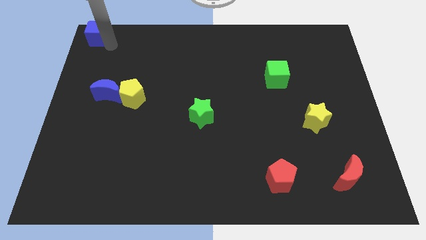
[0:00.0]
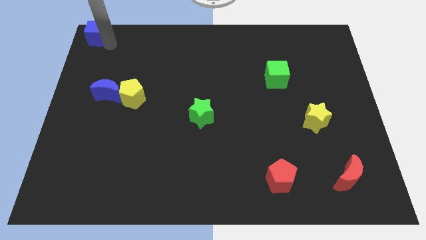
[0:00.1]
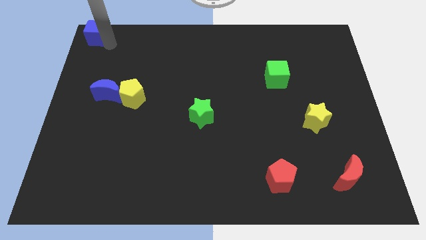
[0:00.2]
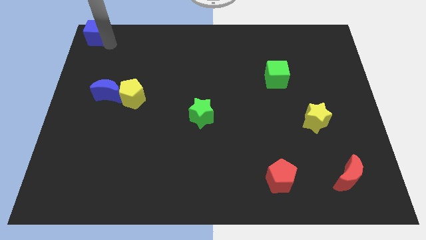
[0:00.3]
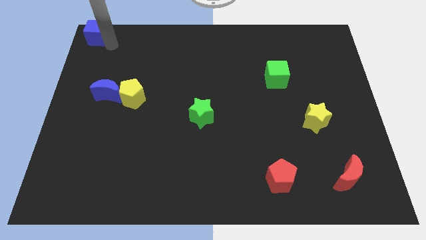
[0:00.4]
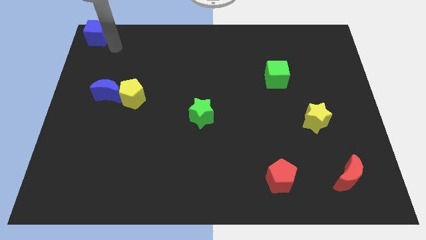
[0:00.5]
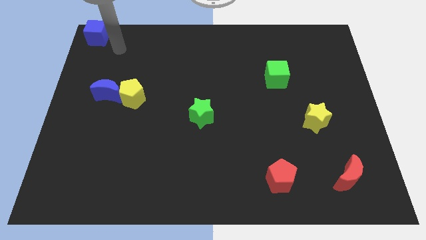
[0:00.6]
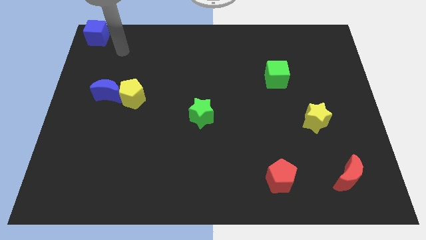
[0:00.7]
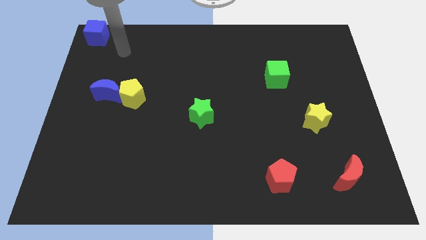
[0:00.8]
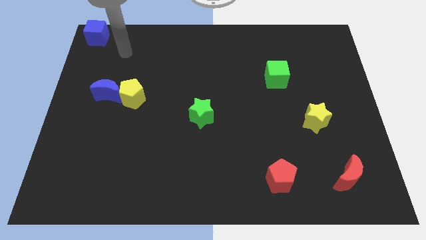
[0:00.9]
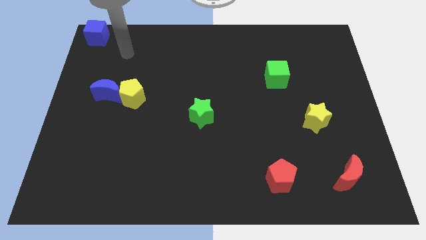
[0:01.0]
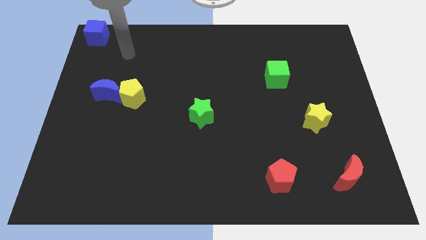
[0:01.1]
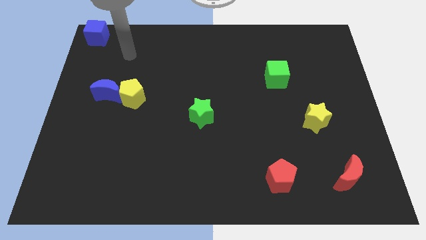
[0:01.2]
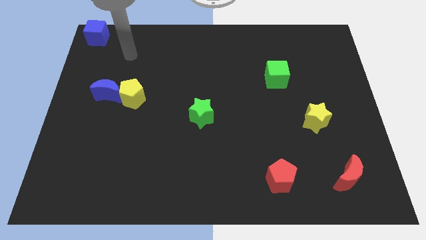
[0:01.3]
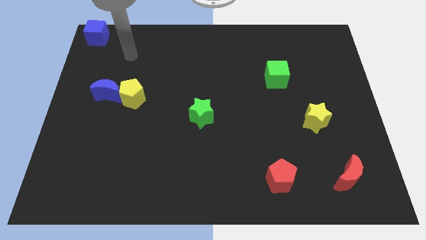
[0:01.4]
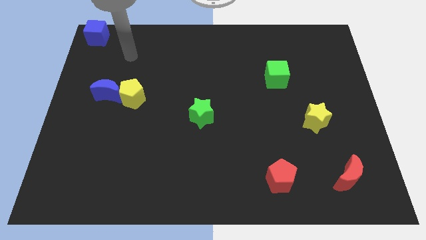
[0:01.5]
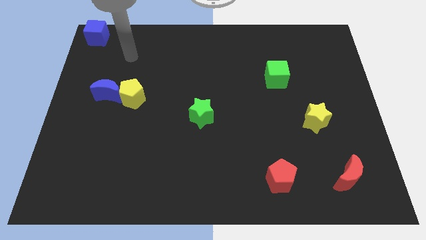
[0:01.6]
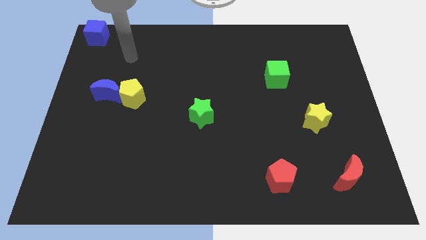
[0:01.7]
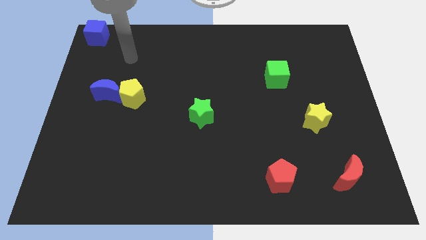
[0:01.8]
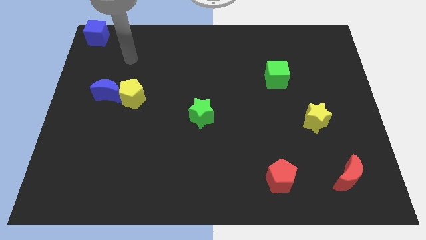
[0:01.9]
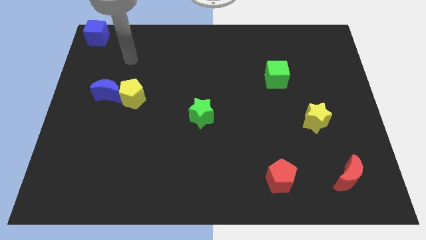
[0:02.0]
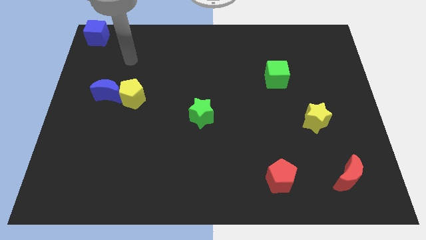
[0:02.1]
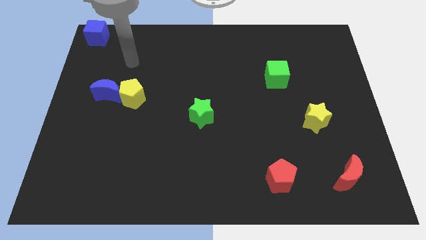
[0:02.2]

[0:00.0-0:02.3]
move yourself away from the blue cube

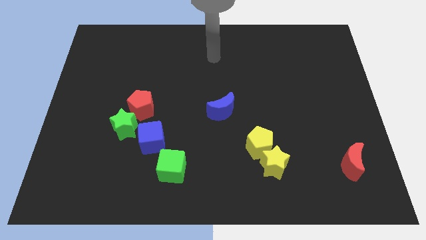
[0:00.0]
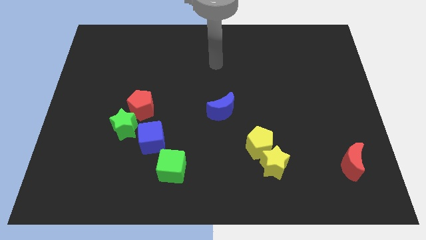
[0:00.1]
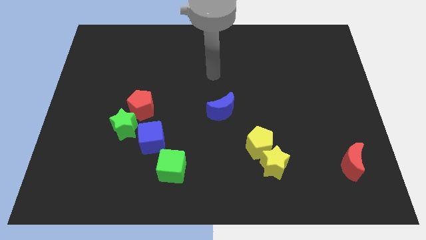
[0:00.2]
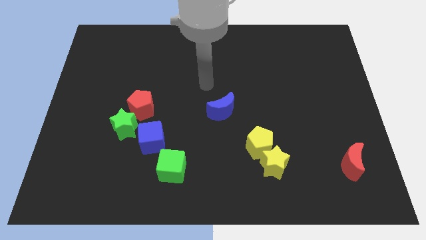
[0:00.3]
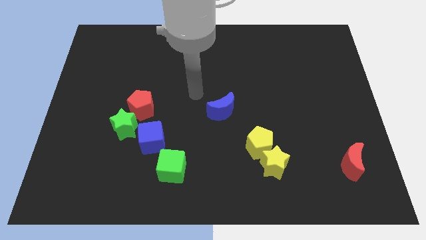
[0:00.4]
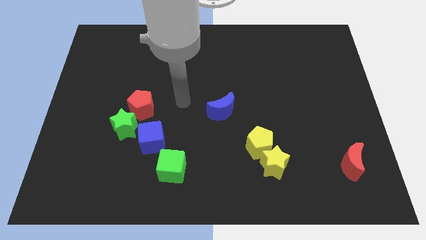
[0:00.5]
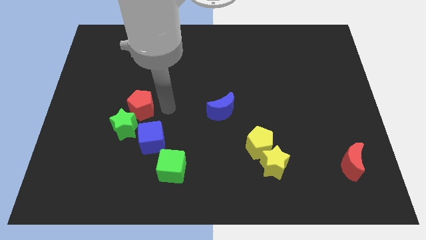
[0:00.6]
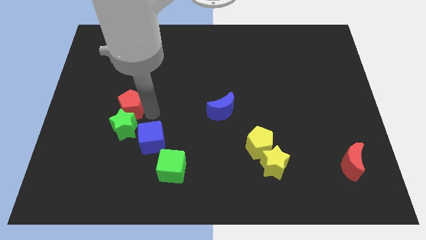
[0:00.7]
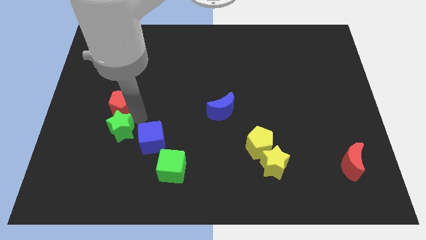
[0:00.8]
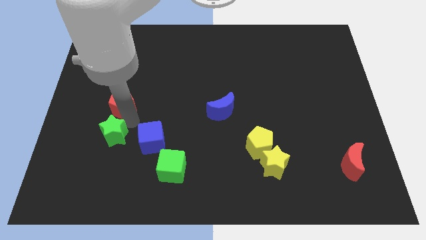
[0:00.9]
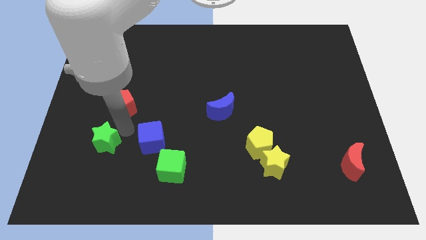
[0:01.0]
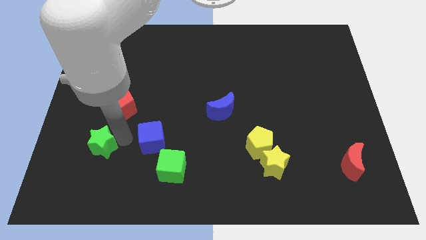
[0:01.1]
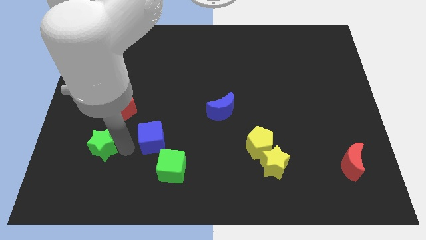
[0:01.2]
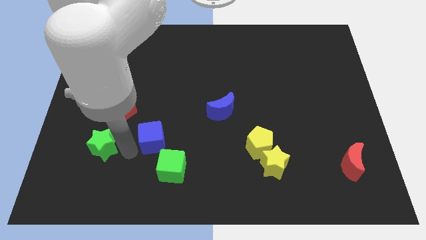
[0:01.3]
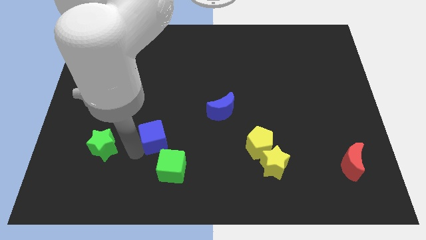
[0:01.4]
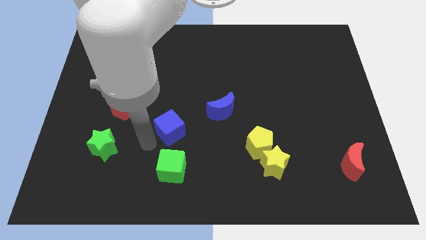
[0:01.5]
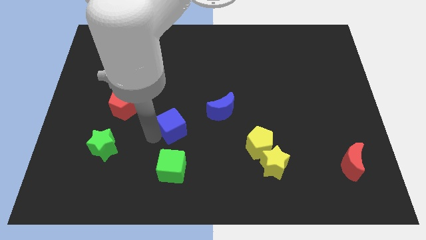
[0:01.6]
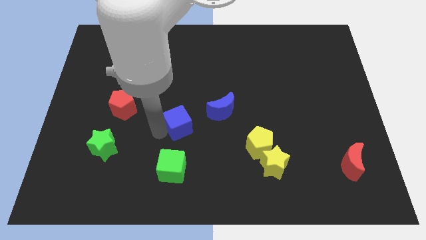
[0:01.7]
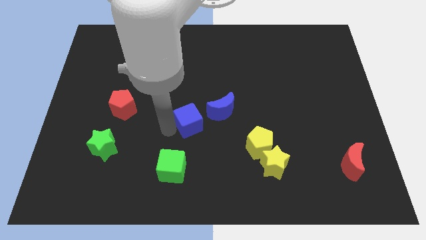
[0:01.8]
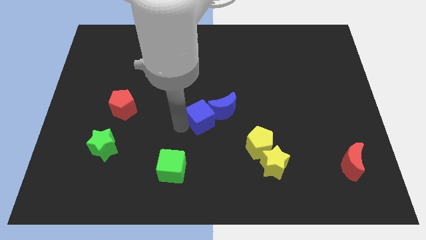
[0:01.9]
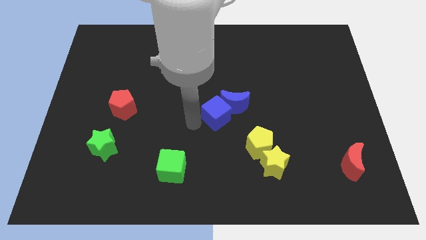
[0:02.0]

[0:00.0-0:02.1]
move blue cube into the blue crescent

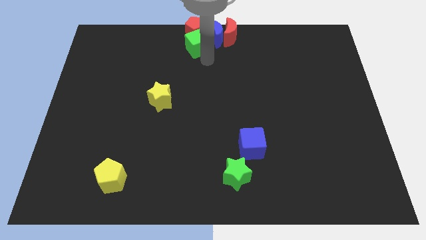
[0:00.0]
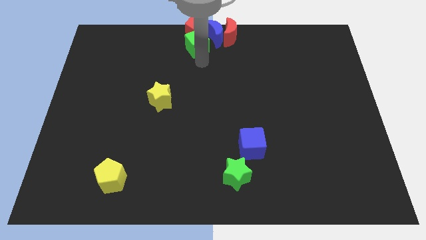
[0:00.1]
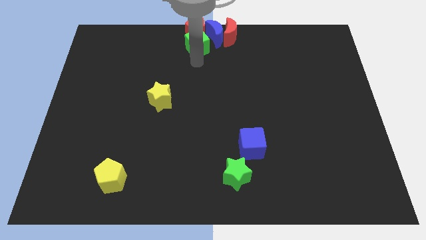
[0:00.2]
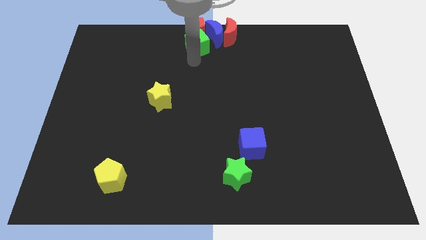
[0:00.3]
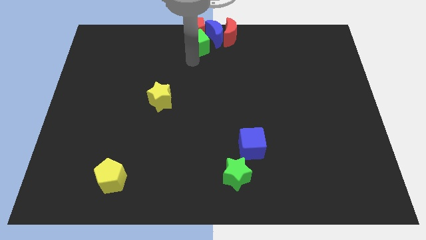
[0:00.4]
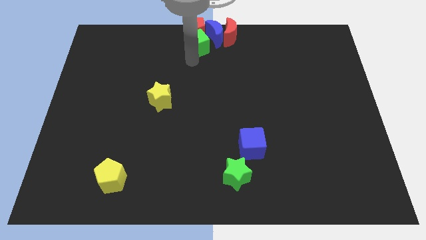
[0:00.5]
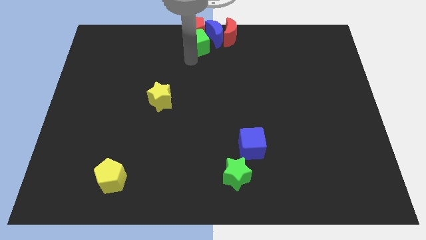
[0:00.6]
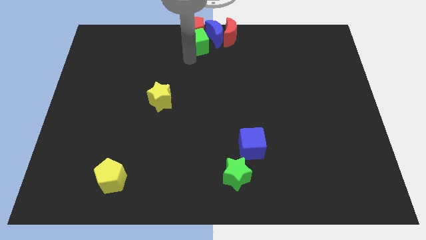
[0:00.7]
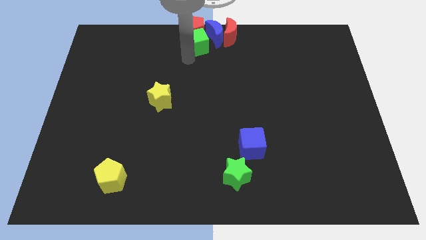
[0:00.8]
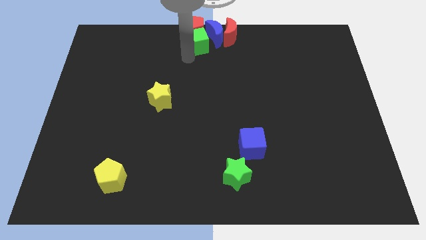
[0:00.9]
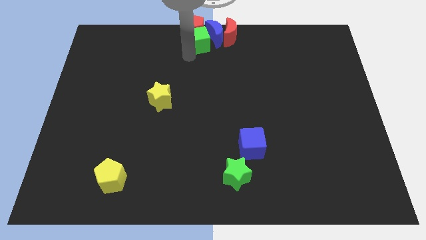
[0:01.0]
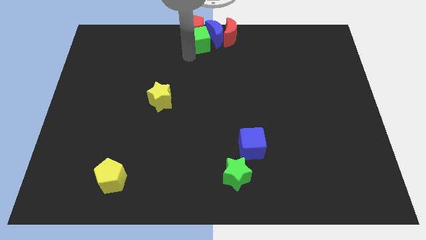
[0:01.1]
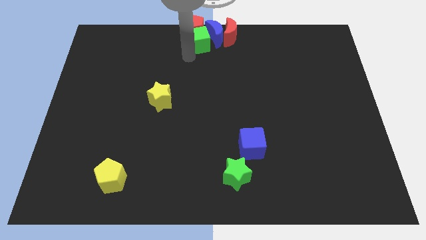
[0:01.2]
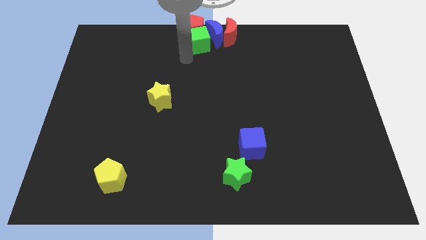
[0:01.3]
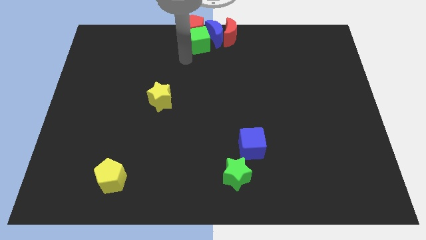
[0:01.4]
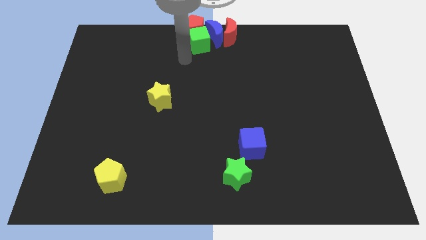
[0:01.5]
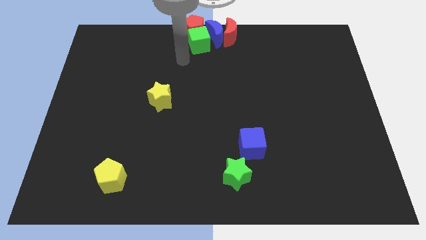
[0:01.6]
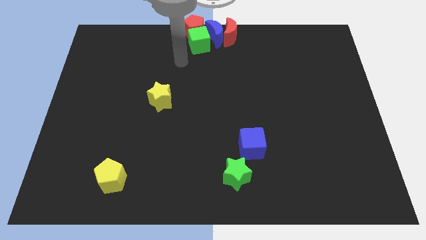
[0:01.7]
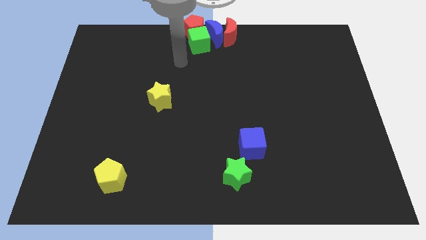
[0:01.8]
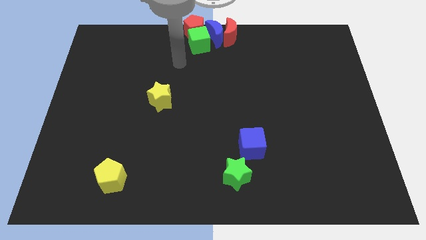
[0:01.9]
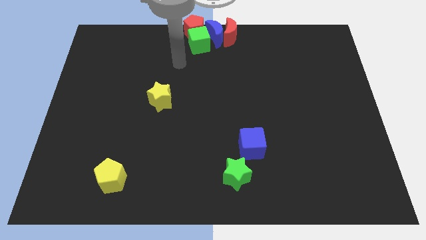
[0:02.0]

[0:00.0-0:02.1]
push the green cube into the red pentagon

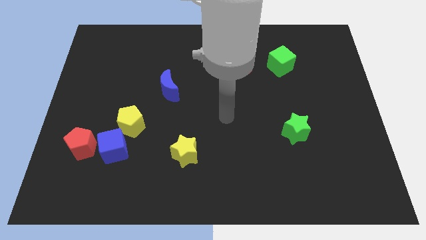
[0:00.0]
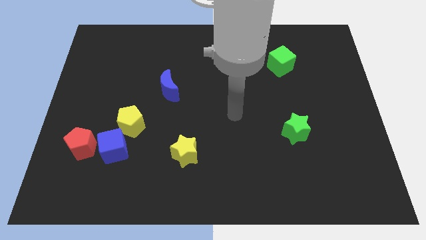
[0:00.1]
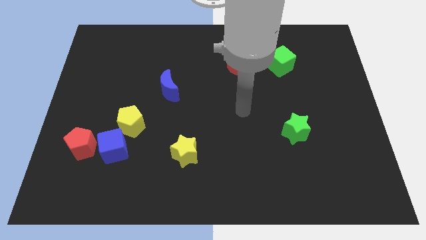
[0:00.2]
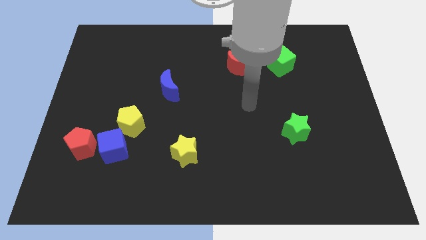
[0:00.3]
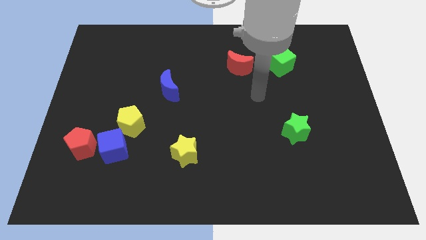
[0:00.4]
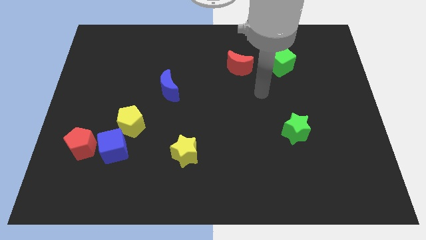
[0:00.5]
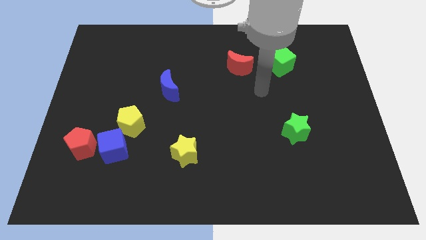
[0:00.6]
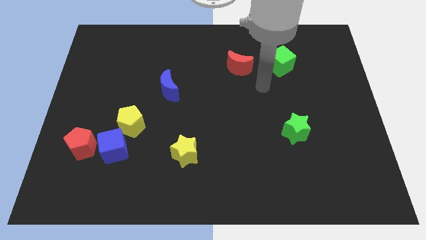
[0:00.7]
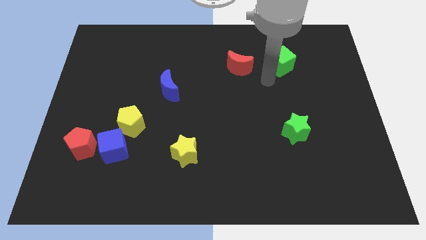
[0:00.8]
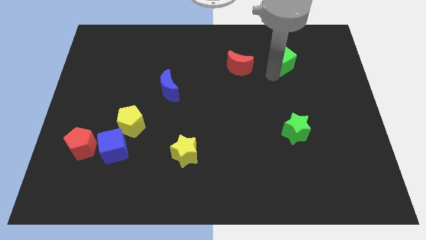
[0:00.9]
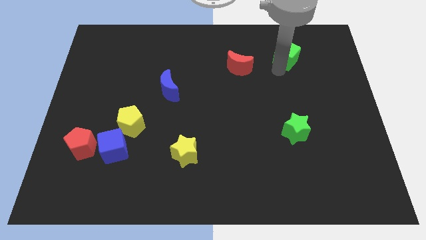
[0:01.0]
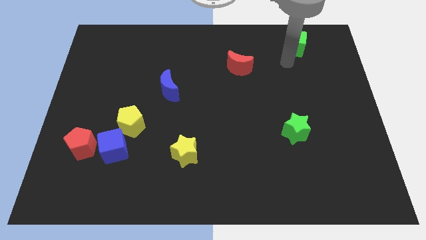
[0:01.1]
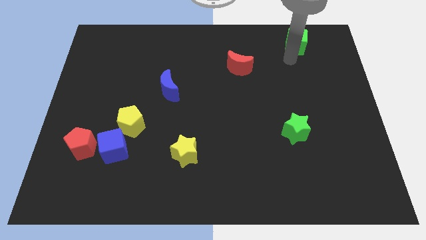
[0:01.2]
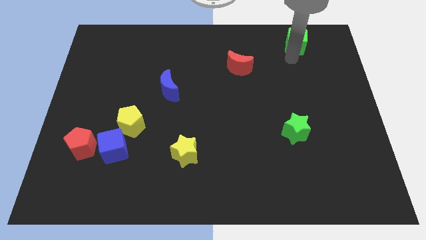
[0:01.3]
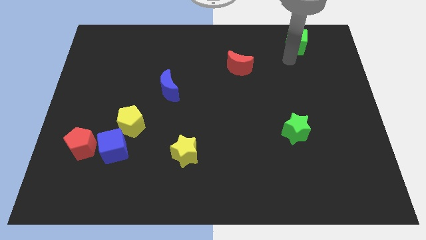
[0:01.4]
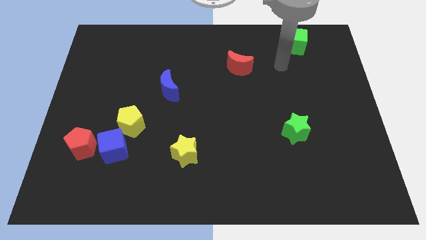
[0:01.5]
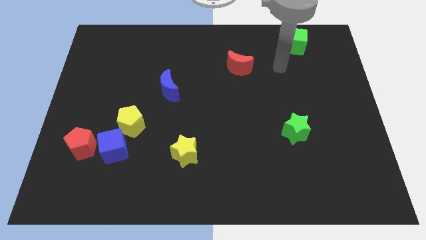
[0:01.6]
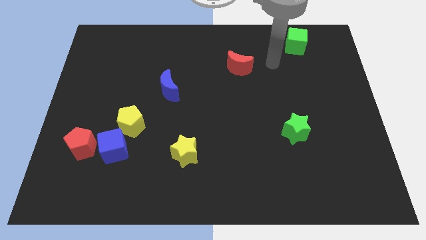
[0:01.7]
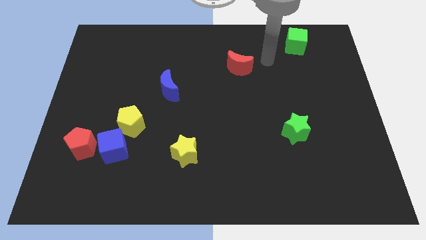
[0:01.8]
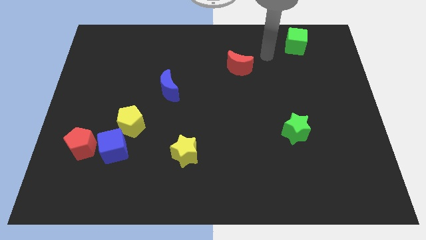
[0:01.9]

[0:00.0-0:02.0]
move the green cube to the top right of the board

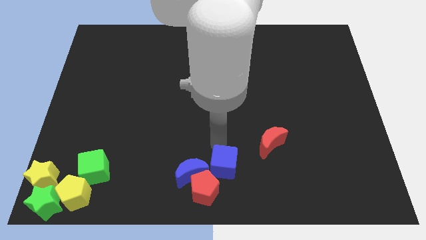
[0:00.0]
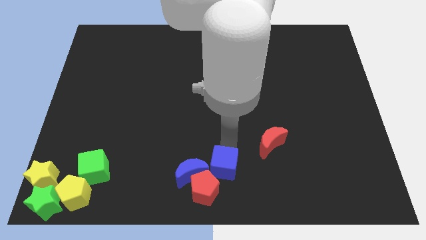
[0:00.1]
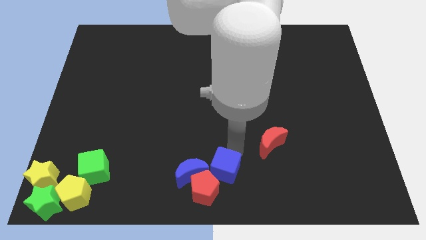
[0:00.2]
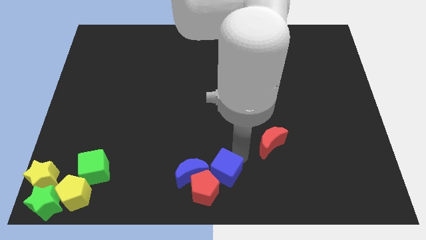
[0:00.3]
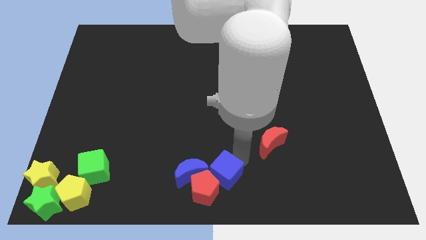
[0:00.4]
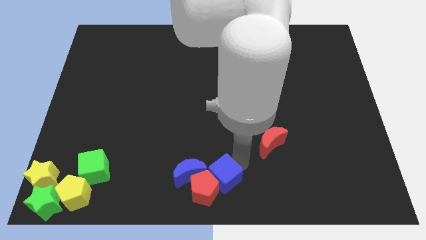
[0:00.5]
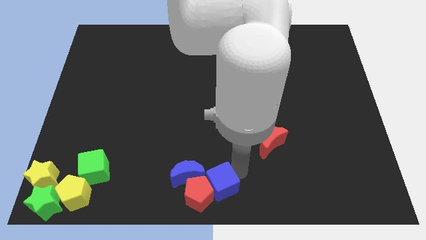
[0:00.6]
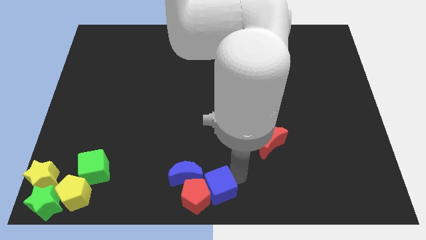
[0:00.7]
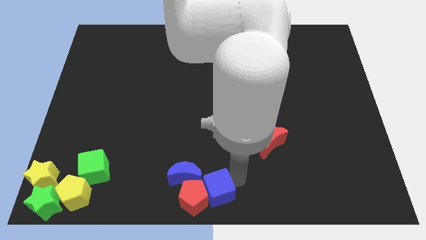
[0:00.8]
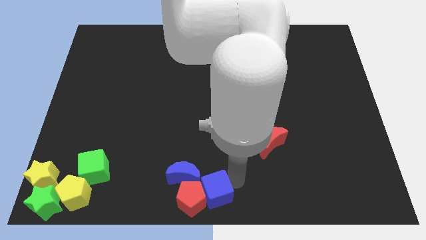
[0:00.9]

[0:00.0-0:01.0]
move the blue cube on the right side to the red pentagon
